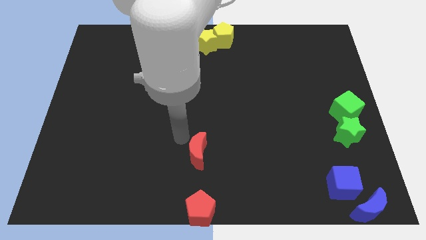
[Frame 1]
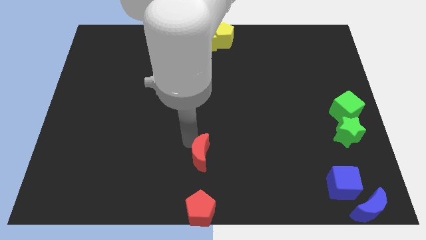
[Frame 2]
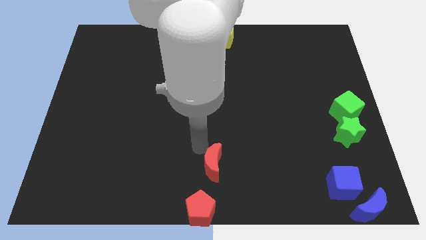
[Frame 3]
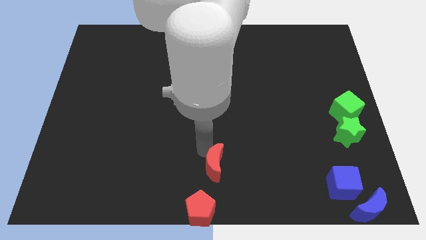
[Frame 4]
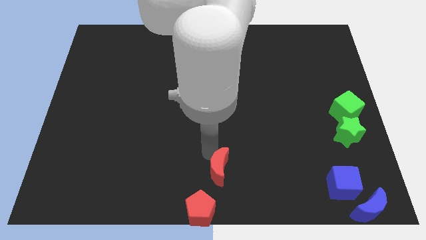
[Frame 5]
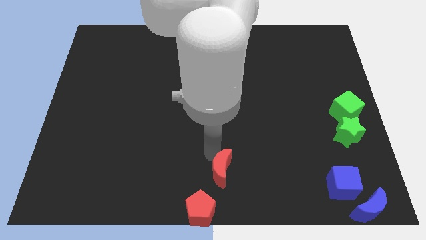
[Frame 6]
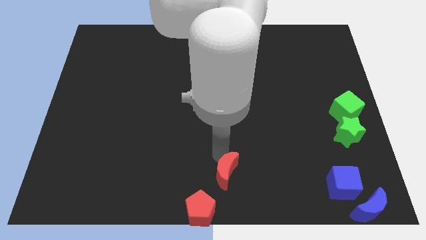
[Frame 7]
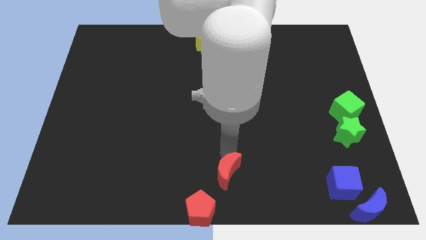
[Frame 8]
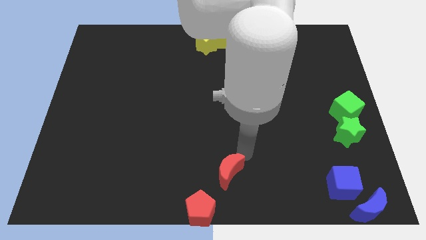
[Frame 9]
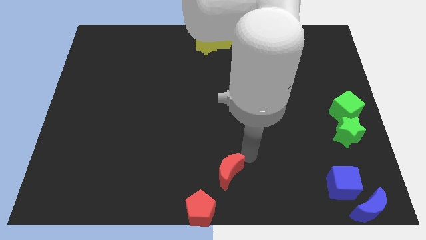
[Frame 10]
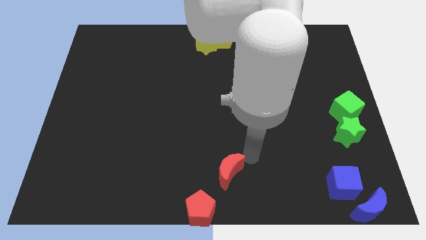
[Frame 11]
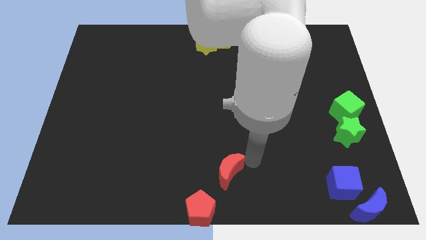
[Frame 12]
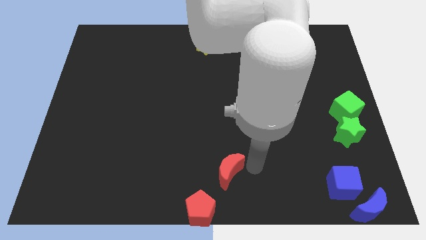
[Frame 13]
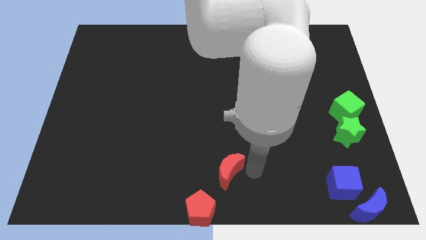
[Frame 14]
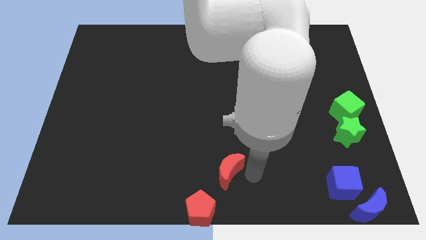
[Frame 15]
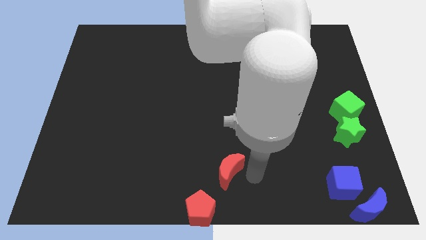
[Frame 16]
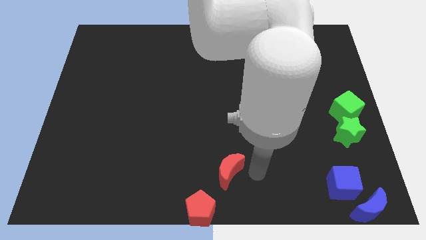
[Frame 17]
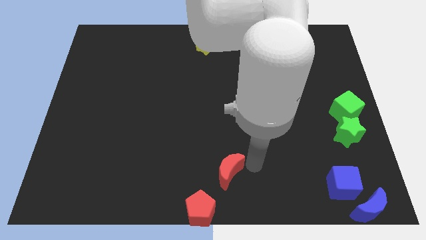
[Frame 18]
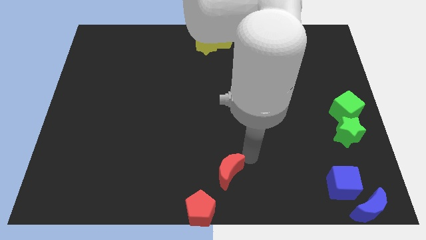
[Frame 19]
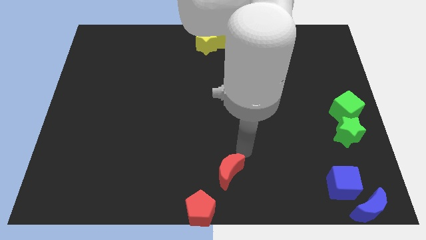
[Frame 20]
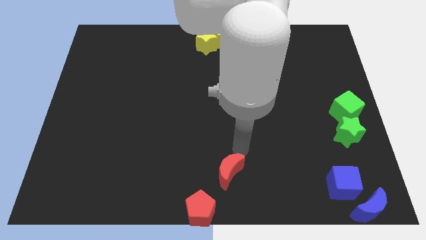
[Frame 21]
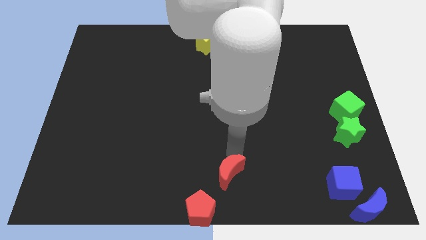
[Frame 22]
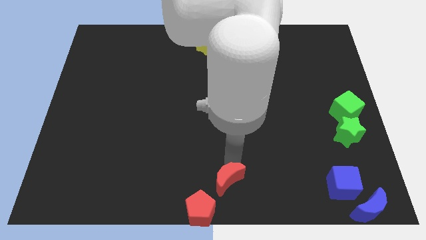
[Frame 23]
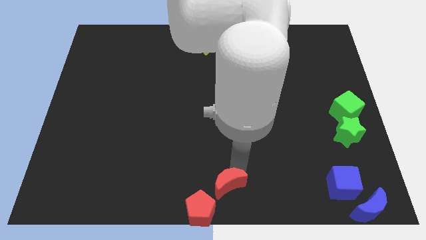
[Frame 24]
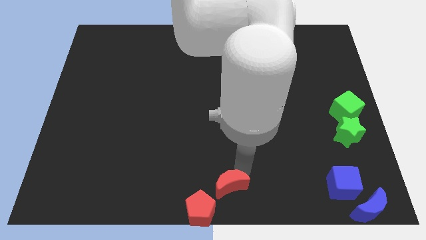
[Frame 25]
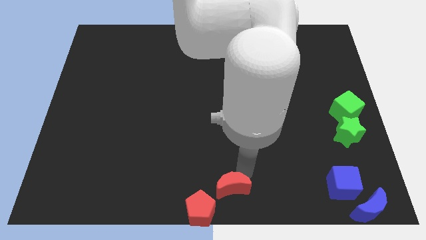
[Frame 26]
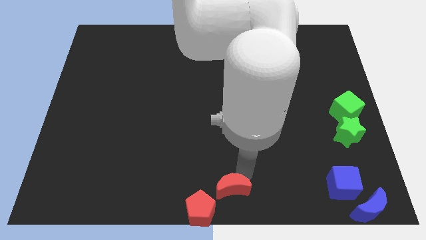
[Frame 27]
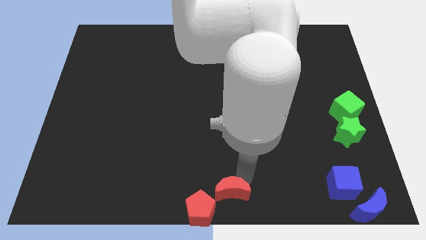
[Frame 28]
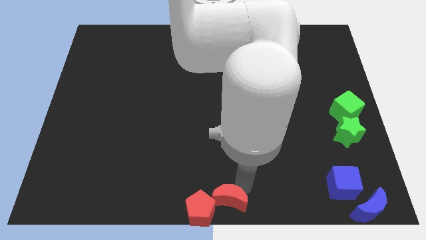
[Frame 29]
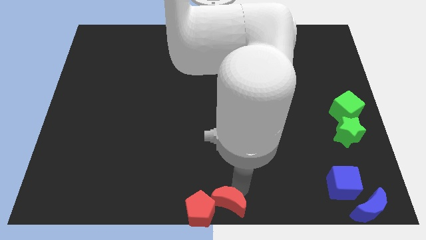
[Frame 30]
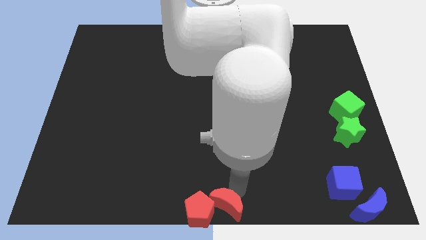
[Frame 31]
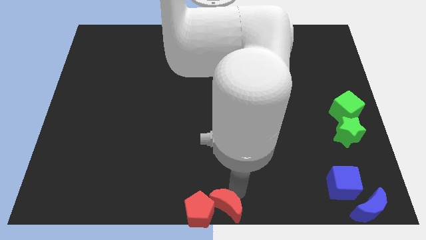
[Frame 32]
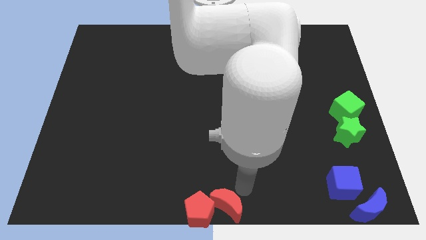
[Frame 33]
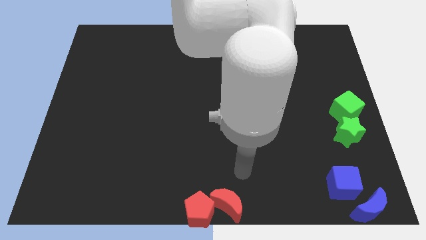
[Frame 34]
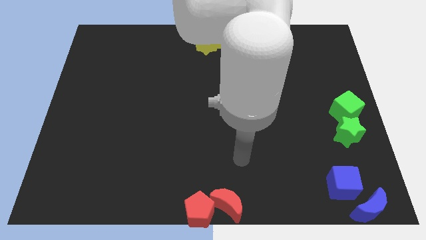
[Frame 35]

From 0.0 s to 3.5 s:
place red moon right to red pentagon

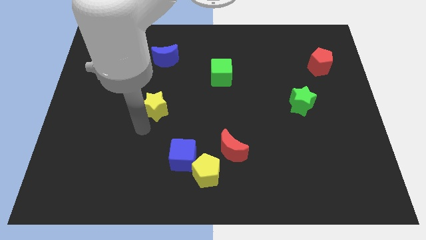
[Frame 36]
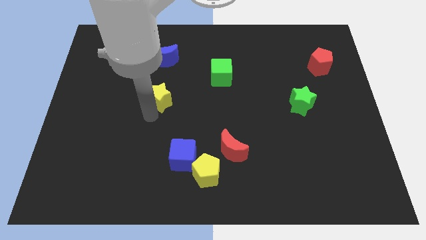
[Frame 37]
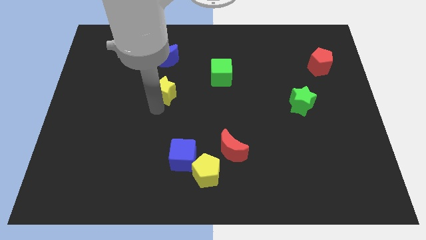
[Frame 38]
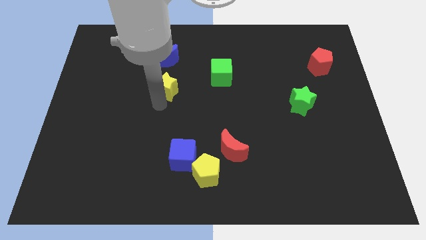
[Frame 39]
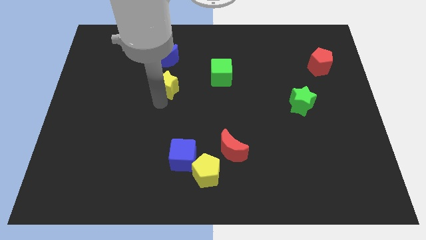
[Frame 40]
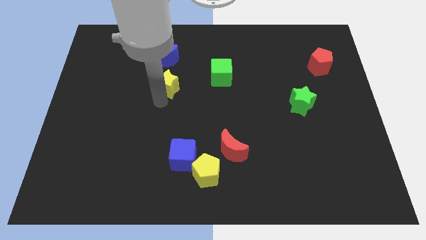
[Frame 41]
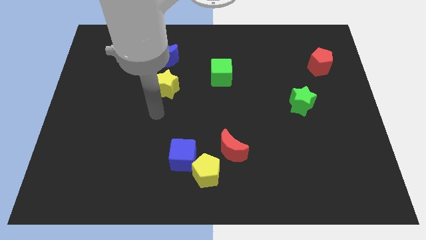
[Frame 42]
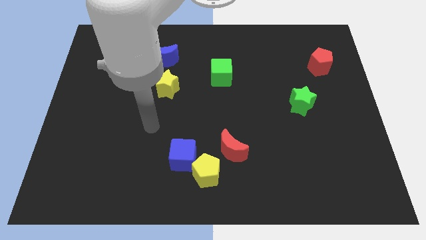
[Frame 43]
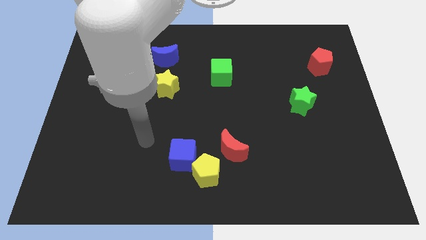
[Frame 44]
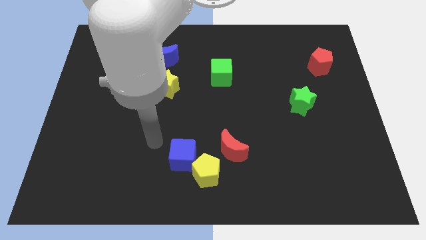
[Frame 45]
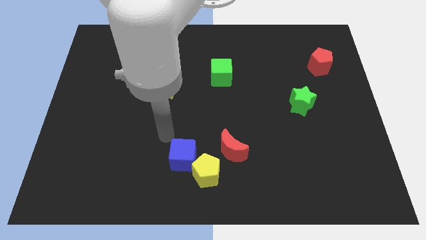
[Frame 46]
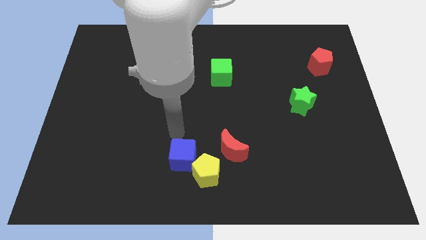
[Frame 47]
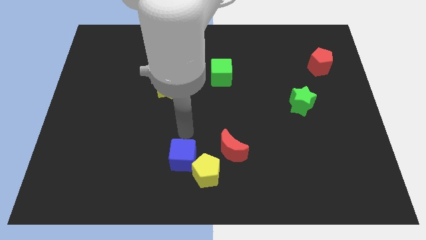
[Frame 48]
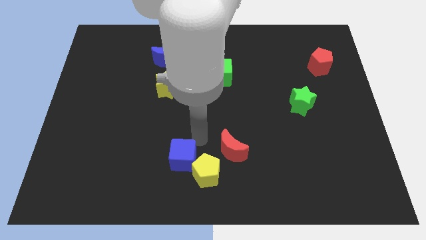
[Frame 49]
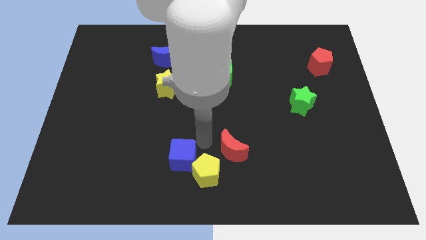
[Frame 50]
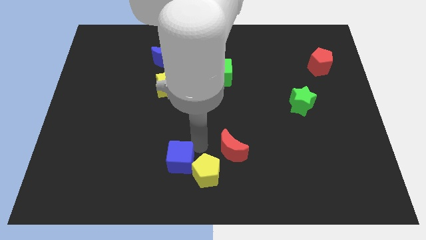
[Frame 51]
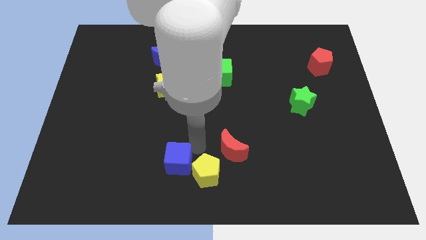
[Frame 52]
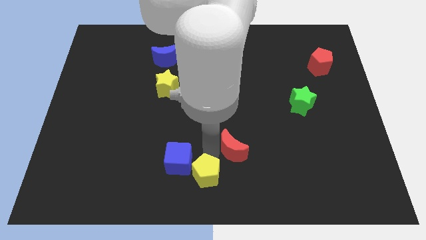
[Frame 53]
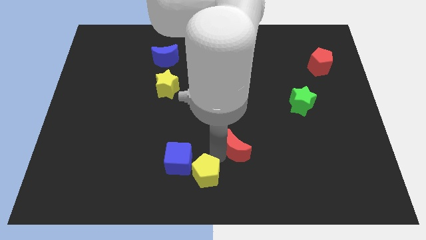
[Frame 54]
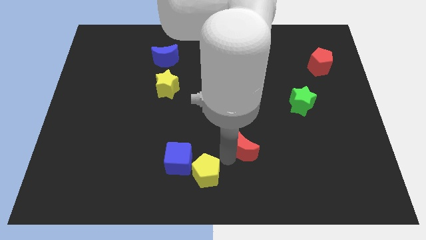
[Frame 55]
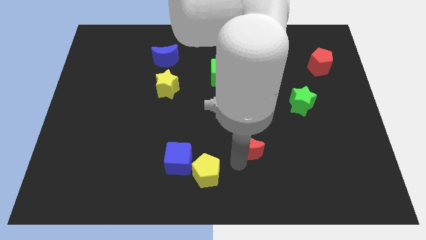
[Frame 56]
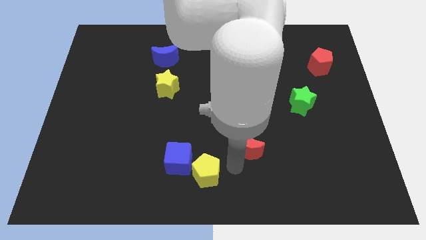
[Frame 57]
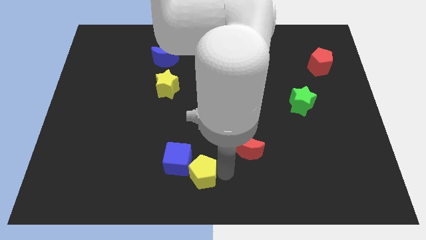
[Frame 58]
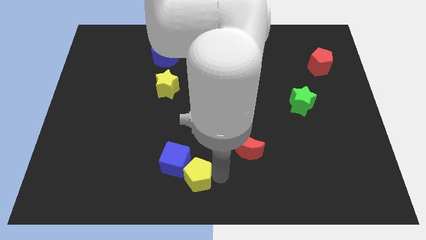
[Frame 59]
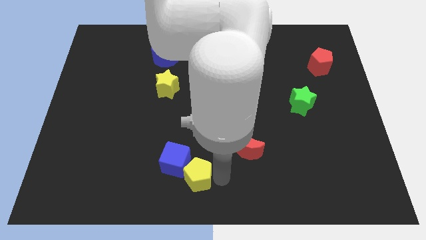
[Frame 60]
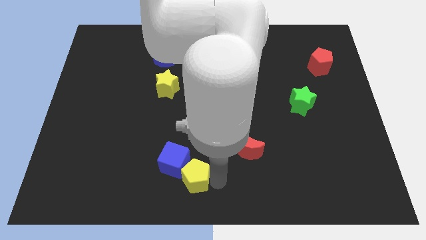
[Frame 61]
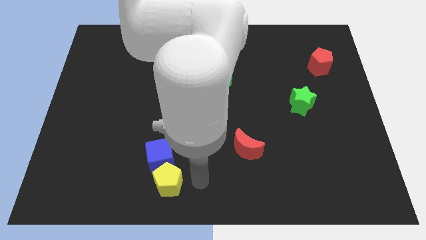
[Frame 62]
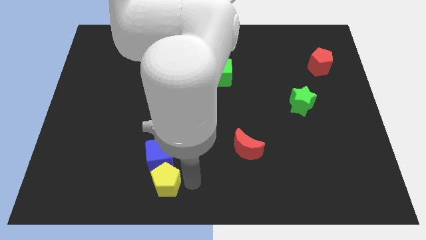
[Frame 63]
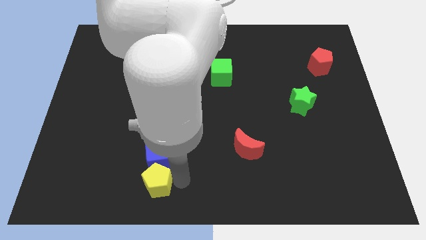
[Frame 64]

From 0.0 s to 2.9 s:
place yellow pentagon below blue cube

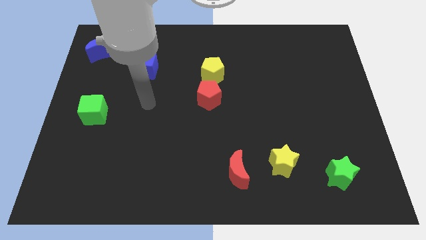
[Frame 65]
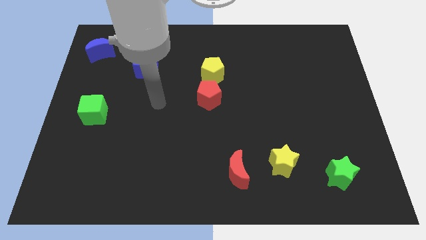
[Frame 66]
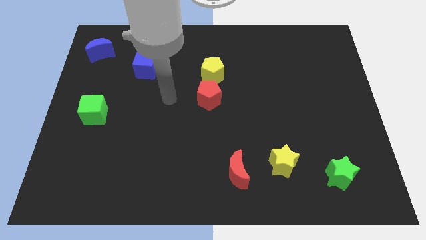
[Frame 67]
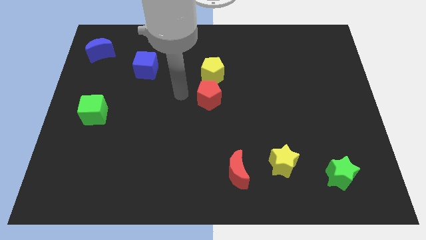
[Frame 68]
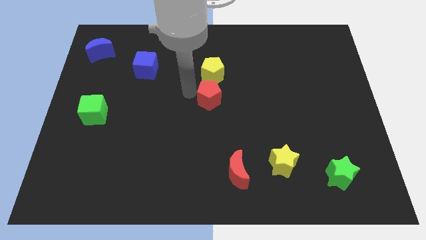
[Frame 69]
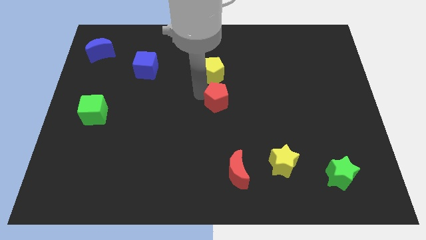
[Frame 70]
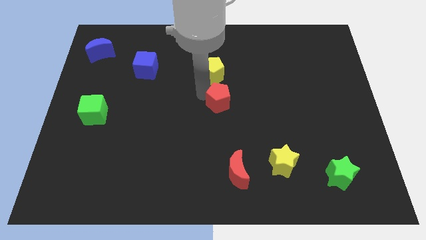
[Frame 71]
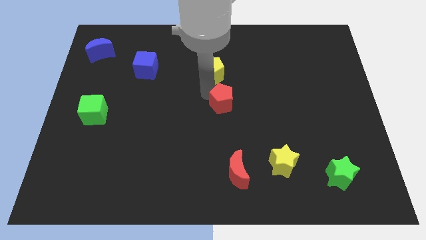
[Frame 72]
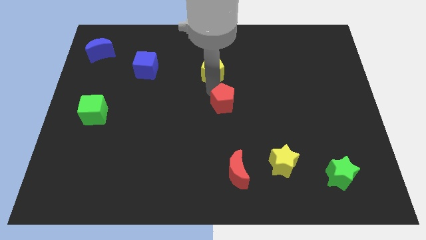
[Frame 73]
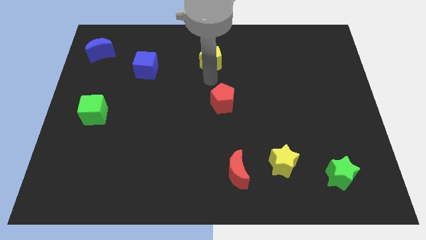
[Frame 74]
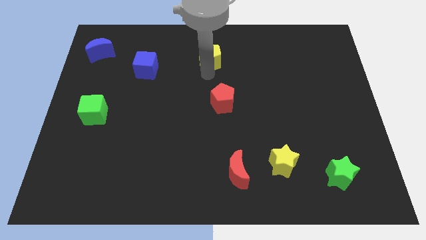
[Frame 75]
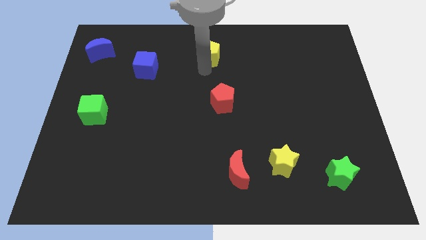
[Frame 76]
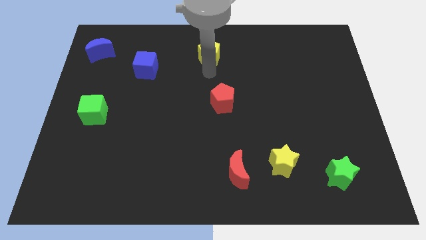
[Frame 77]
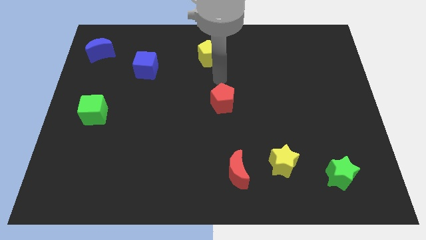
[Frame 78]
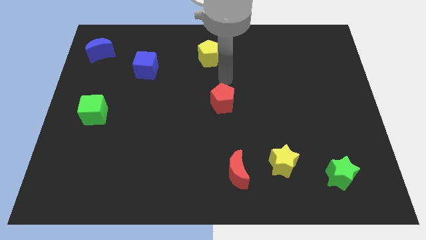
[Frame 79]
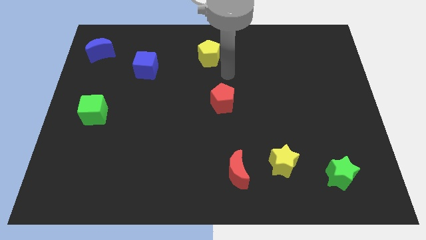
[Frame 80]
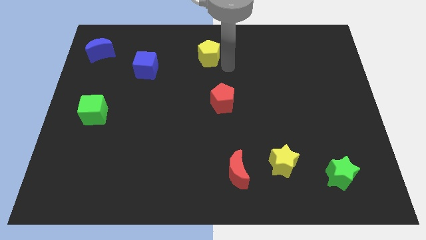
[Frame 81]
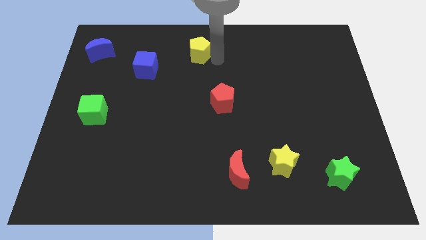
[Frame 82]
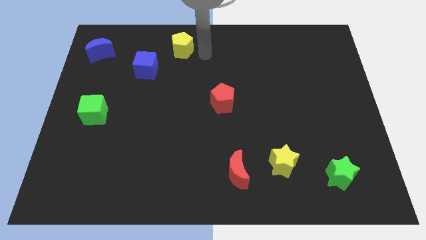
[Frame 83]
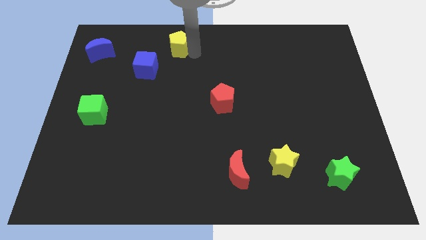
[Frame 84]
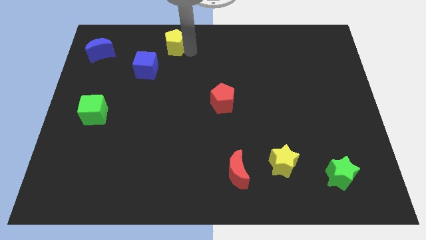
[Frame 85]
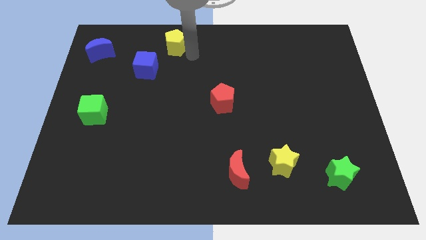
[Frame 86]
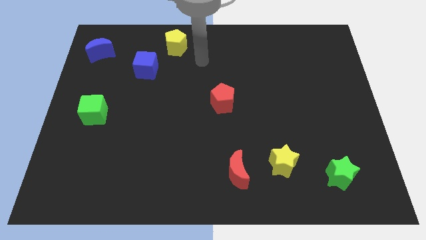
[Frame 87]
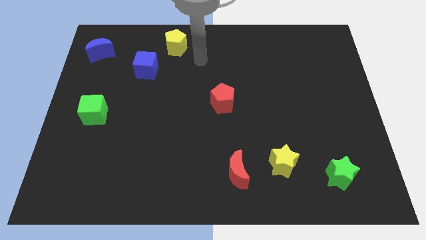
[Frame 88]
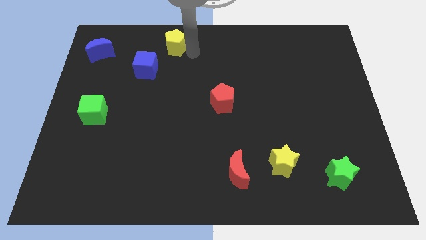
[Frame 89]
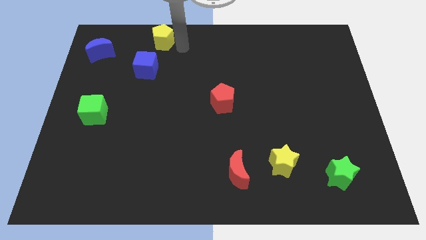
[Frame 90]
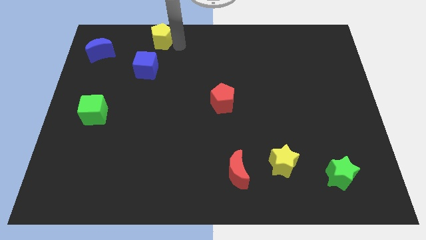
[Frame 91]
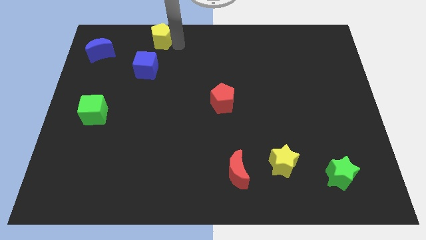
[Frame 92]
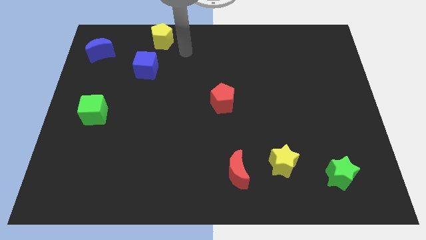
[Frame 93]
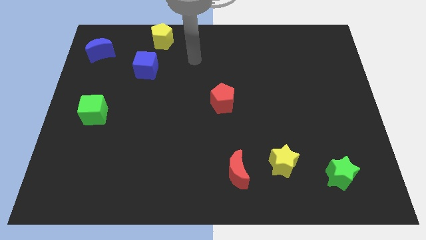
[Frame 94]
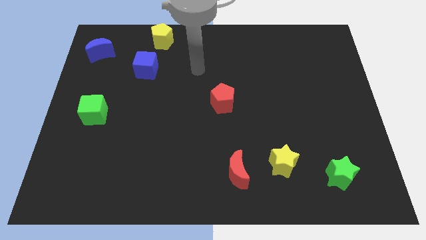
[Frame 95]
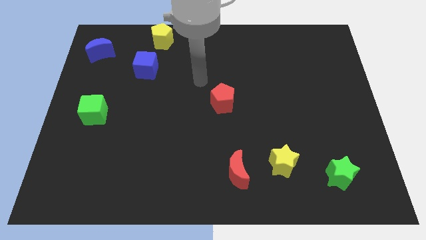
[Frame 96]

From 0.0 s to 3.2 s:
separate the red pentagon and yellow pentagon
